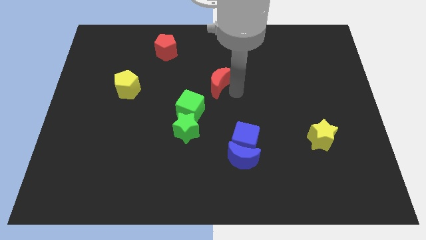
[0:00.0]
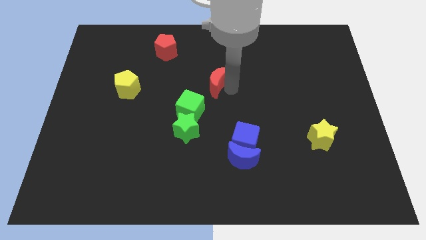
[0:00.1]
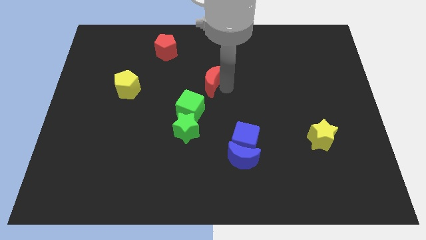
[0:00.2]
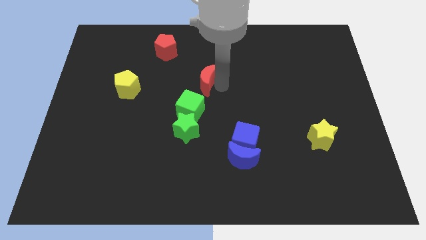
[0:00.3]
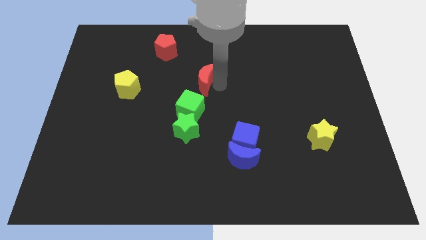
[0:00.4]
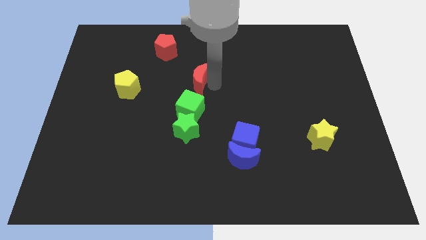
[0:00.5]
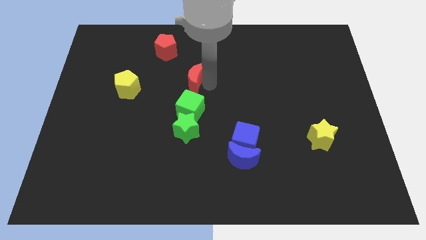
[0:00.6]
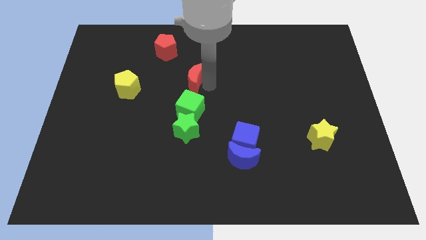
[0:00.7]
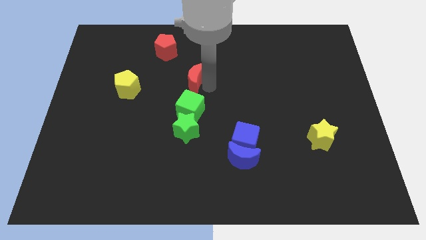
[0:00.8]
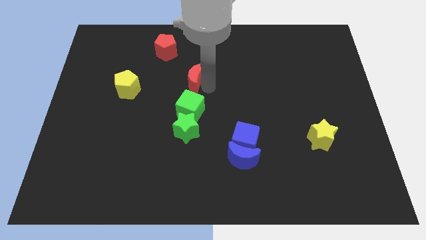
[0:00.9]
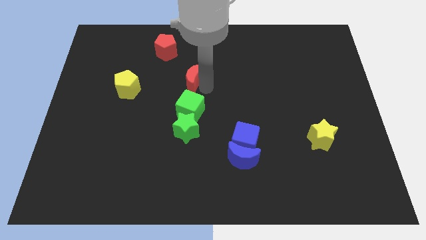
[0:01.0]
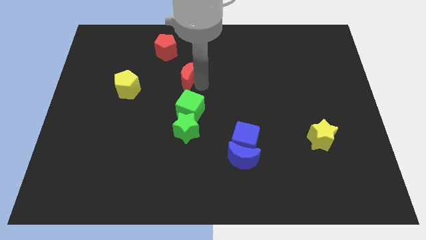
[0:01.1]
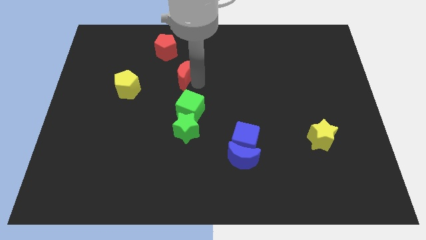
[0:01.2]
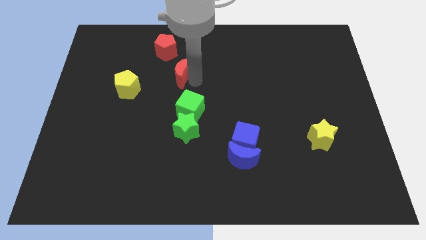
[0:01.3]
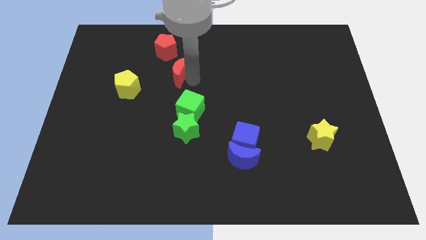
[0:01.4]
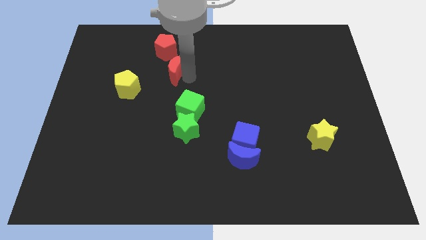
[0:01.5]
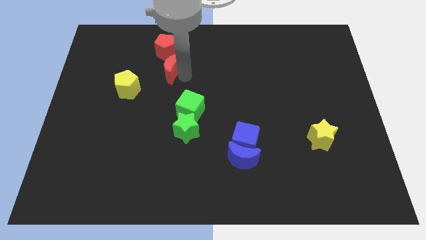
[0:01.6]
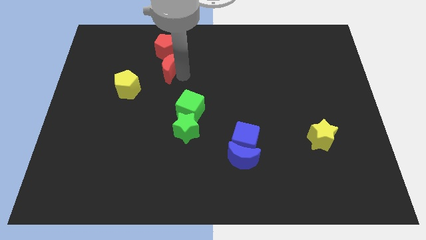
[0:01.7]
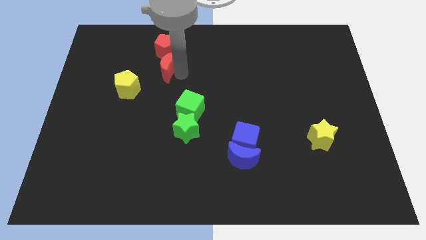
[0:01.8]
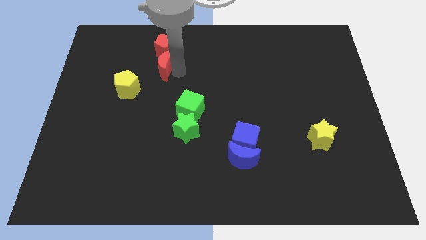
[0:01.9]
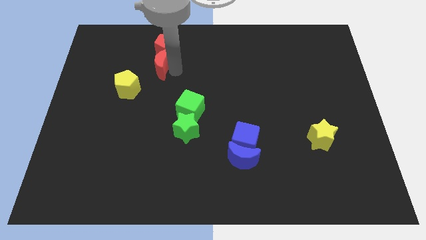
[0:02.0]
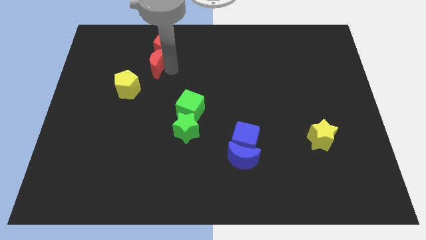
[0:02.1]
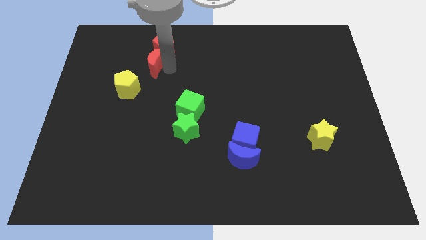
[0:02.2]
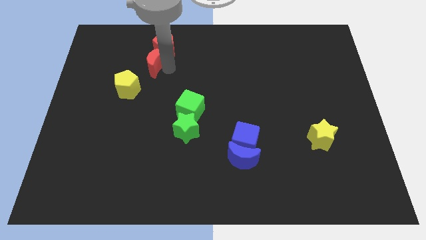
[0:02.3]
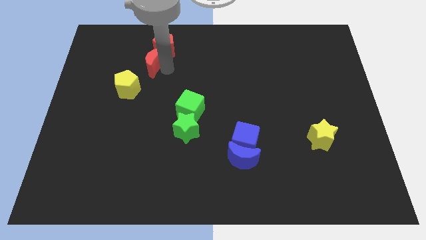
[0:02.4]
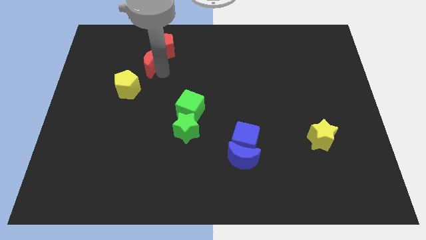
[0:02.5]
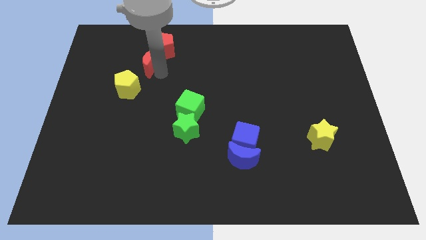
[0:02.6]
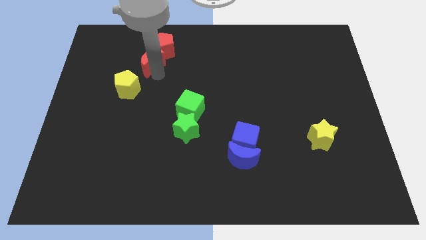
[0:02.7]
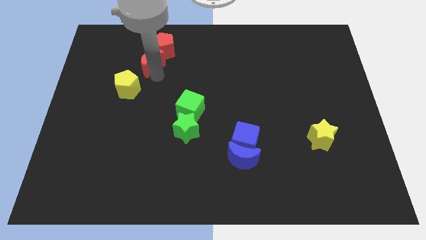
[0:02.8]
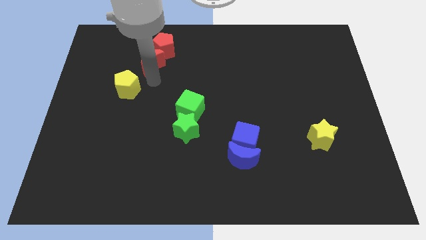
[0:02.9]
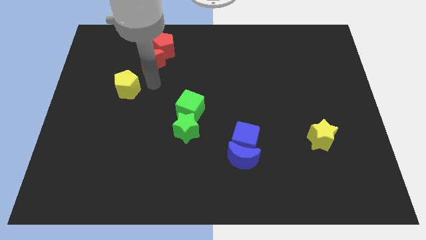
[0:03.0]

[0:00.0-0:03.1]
place the red crescent below to the red pentagon

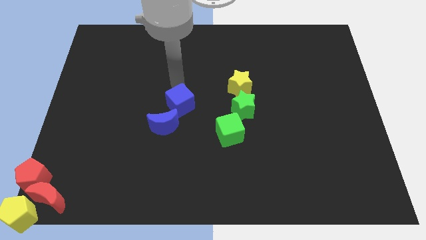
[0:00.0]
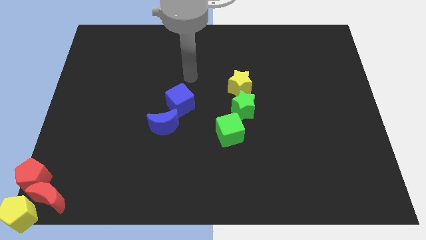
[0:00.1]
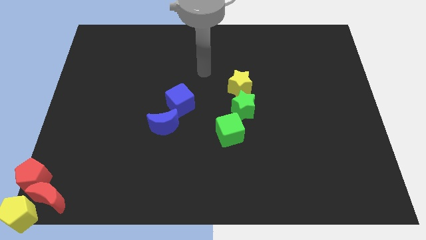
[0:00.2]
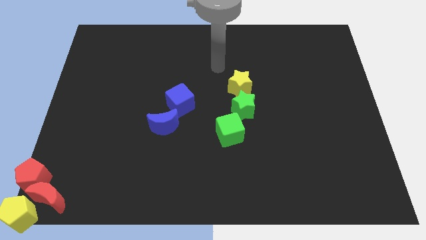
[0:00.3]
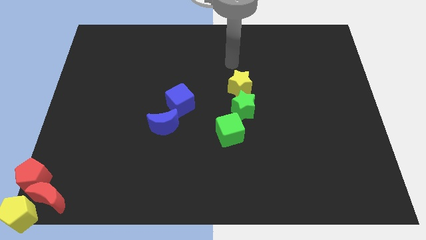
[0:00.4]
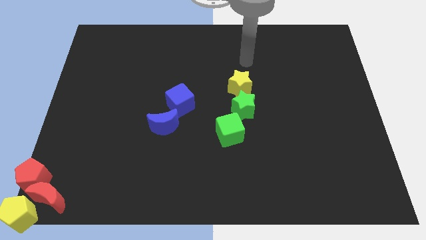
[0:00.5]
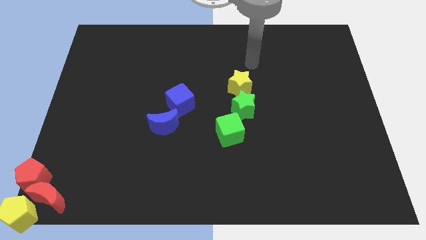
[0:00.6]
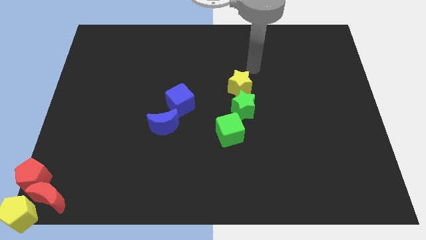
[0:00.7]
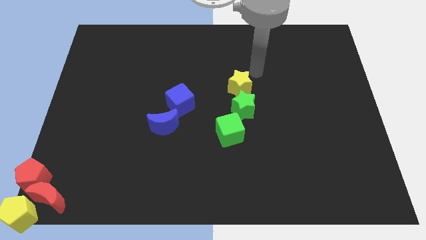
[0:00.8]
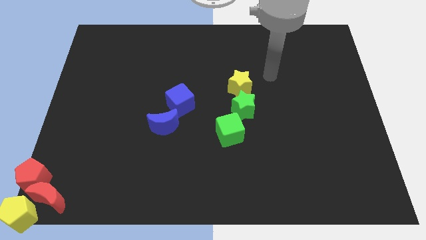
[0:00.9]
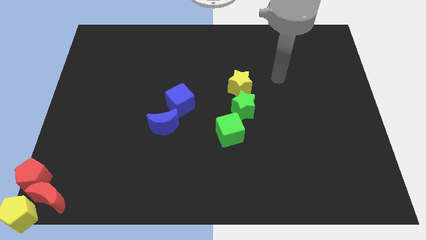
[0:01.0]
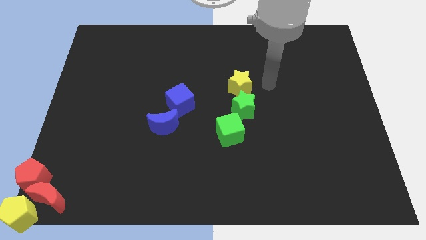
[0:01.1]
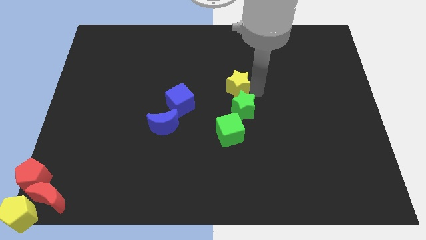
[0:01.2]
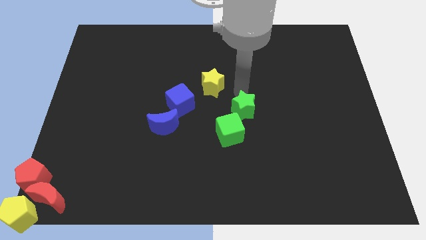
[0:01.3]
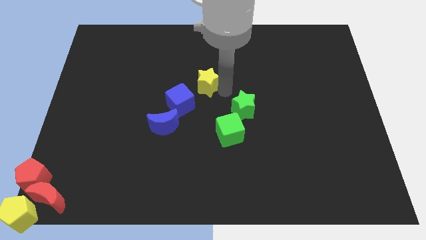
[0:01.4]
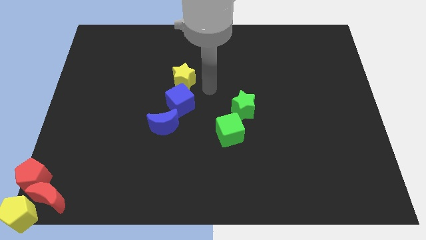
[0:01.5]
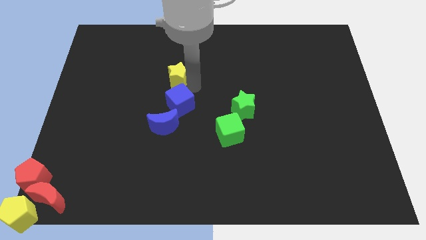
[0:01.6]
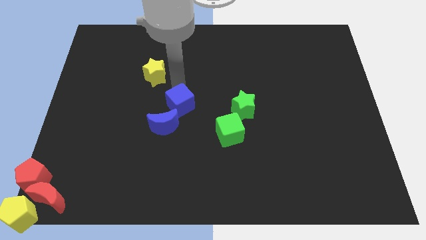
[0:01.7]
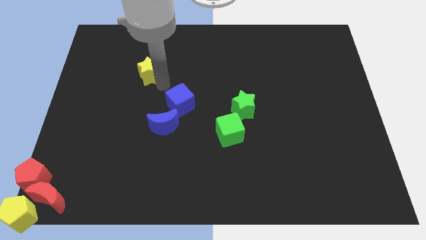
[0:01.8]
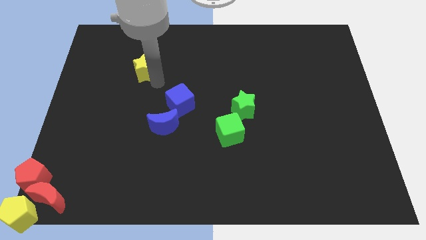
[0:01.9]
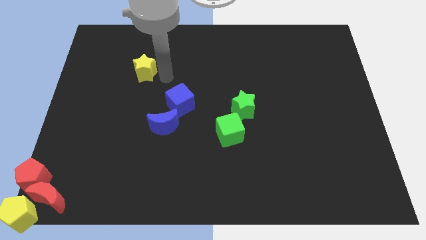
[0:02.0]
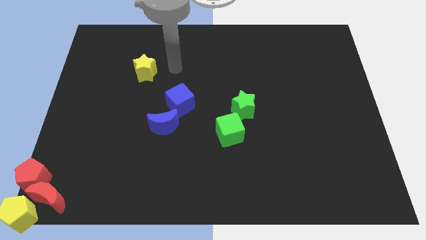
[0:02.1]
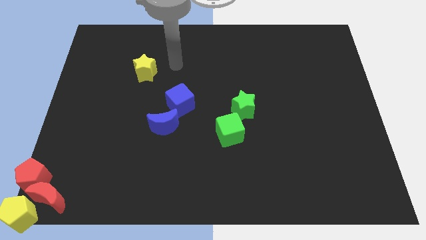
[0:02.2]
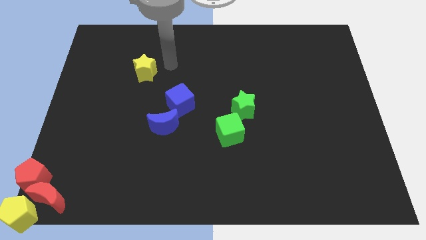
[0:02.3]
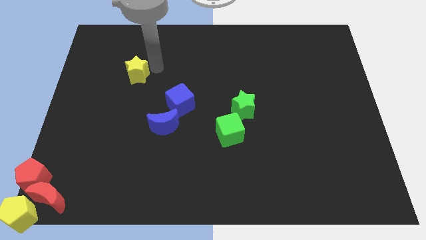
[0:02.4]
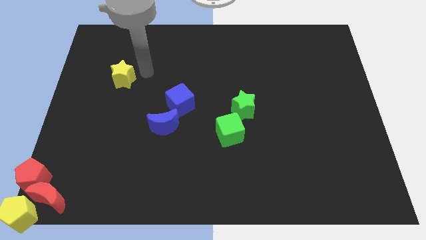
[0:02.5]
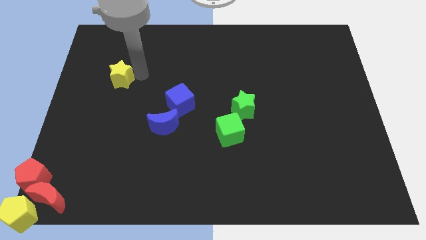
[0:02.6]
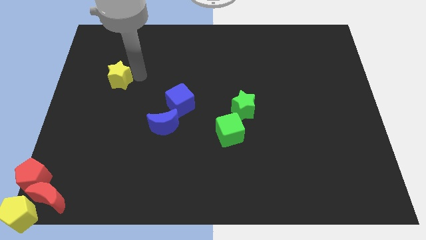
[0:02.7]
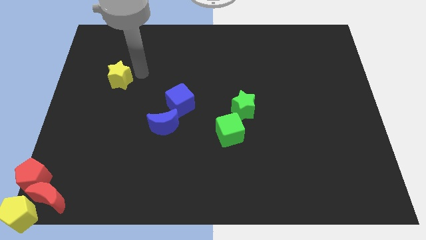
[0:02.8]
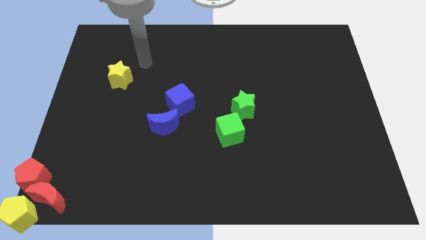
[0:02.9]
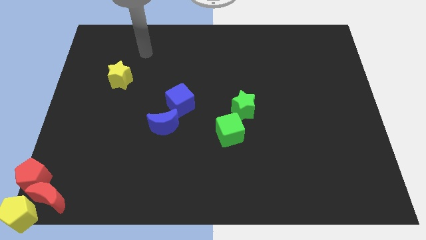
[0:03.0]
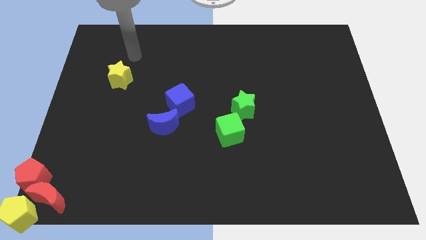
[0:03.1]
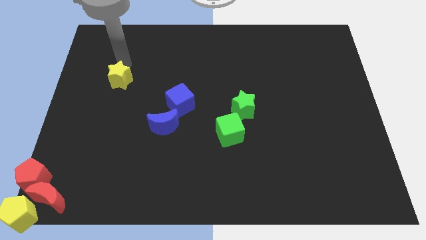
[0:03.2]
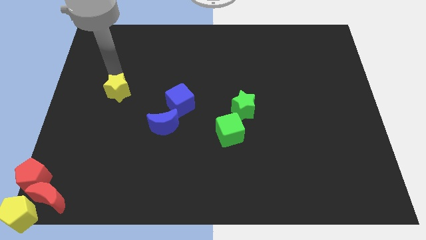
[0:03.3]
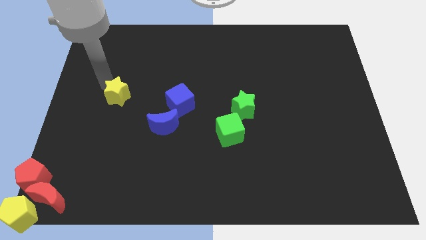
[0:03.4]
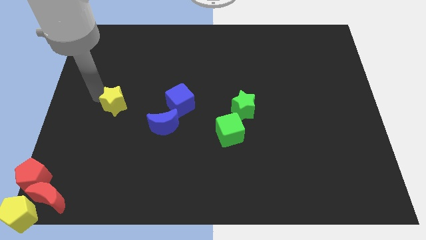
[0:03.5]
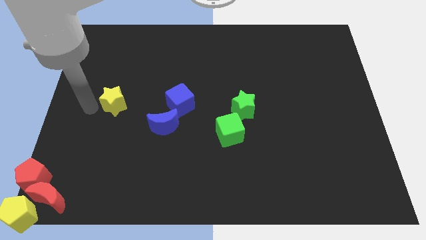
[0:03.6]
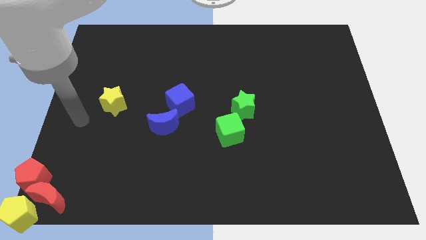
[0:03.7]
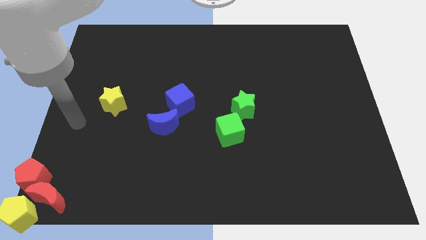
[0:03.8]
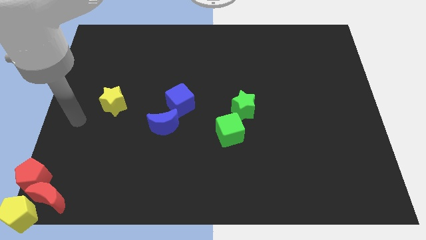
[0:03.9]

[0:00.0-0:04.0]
place the yellow star to the horizontal left of the blue cube

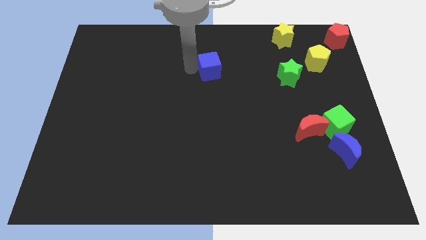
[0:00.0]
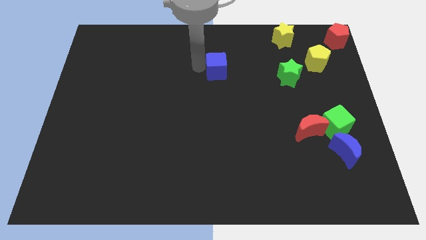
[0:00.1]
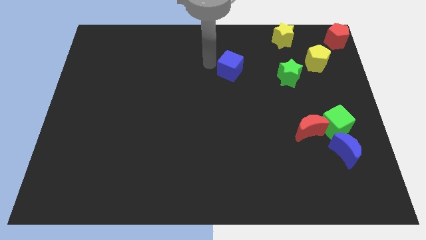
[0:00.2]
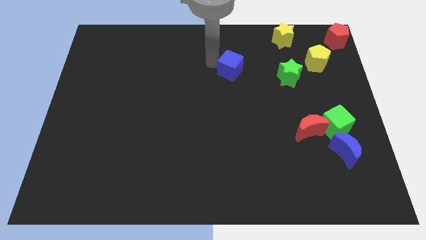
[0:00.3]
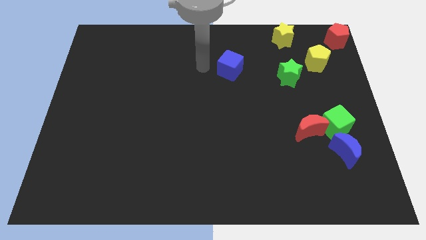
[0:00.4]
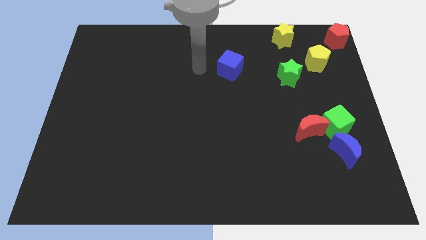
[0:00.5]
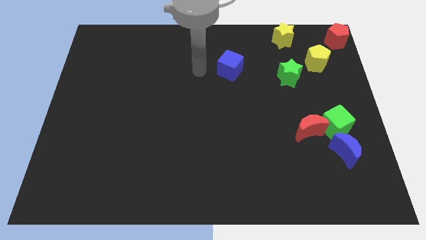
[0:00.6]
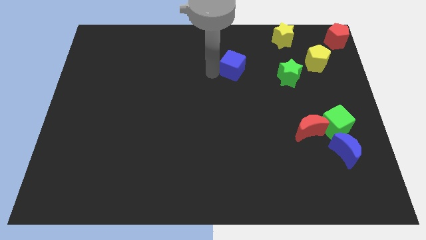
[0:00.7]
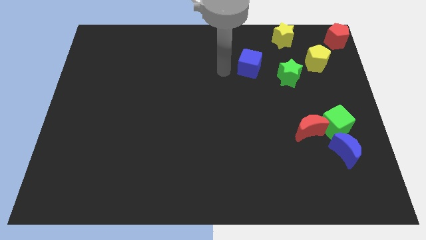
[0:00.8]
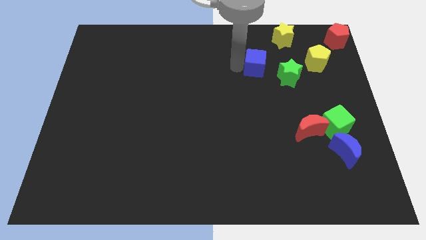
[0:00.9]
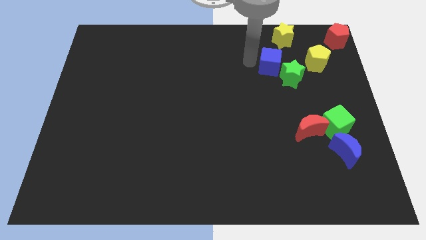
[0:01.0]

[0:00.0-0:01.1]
place blue cube to the top left of green star

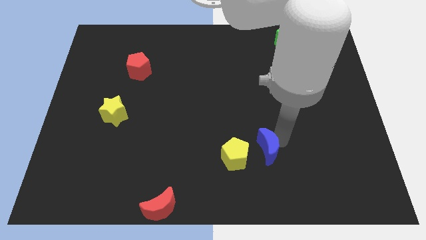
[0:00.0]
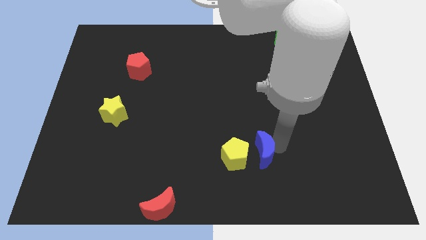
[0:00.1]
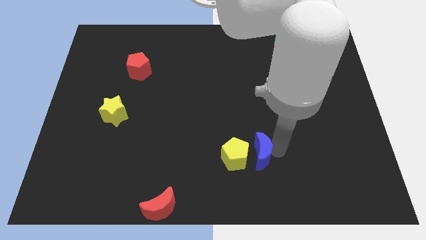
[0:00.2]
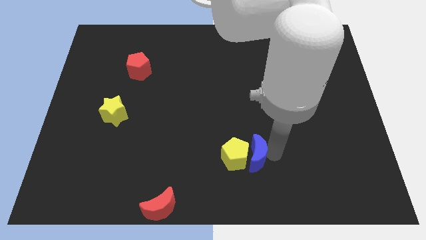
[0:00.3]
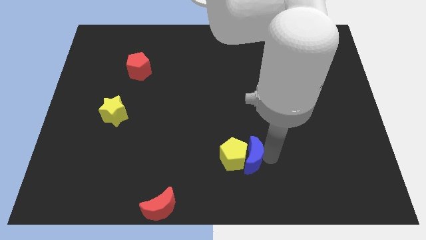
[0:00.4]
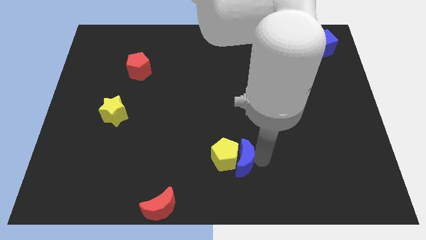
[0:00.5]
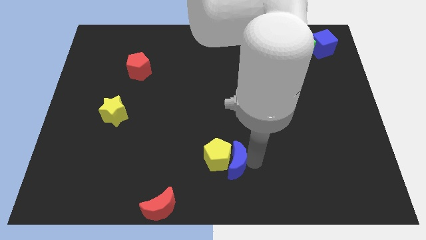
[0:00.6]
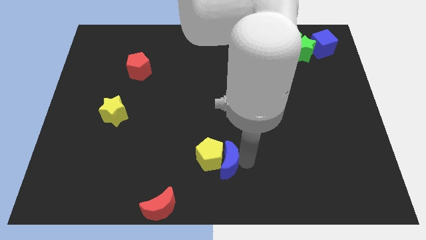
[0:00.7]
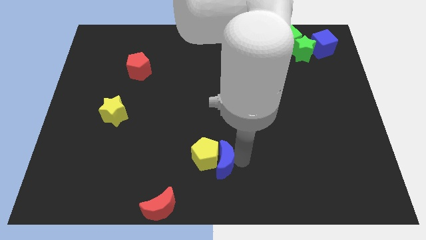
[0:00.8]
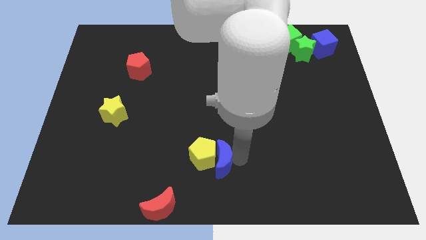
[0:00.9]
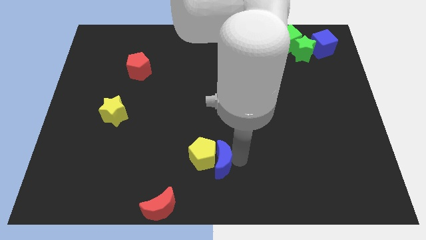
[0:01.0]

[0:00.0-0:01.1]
move the blue crescent into yellow pentagon
